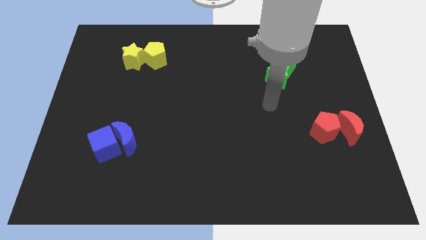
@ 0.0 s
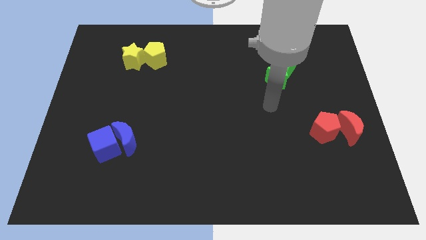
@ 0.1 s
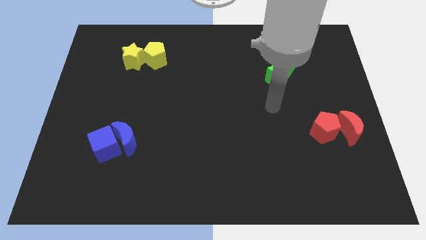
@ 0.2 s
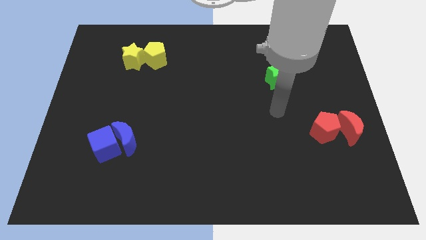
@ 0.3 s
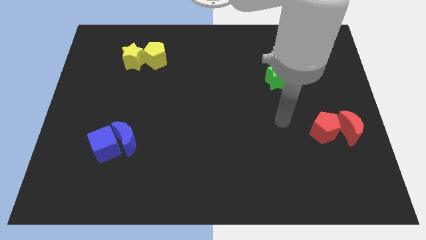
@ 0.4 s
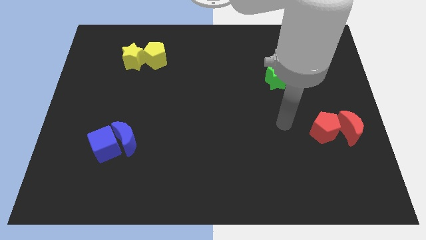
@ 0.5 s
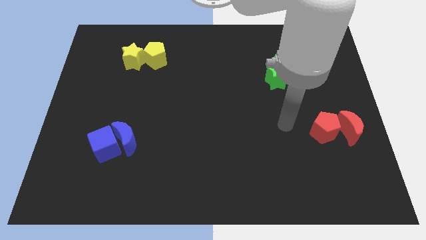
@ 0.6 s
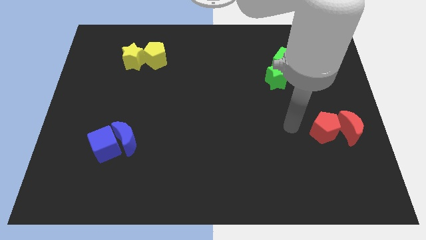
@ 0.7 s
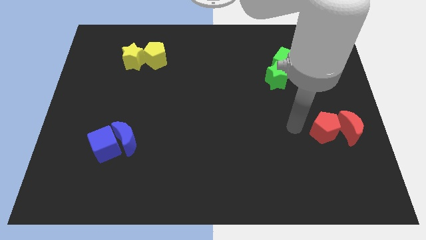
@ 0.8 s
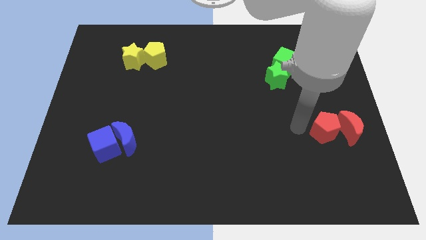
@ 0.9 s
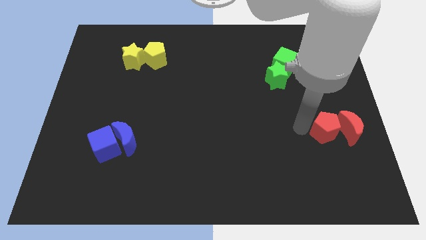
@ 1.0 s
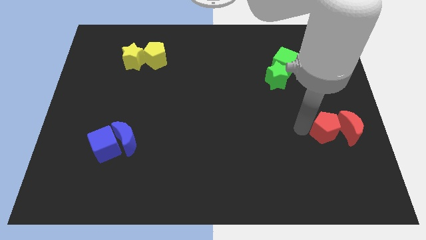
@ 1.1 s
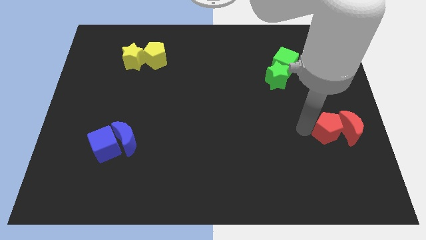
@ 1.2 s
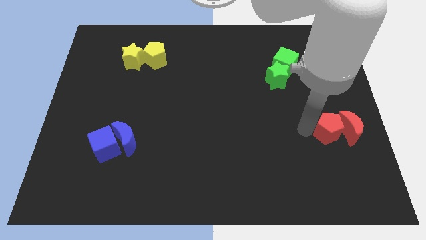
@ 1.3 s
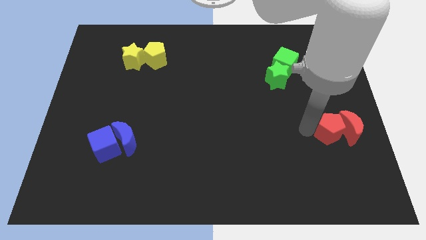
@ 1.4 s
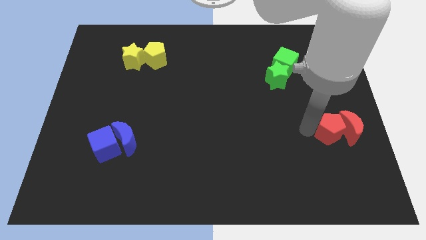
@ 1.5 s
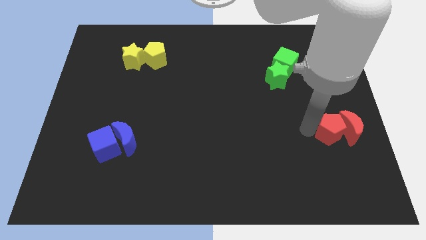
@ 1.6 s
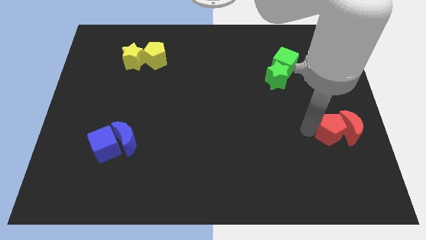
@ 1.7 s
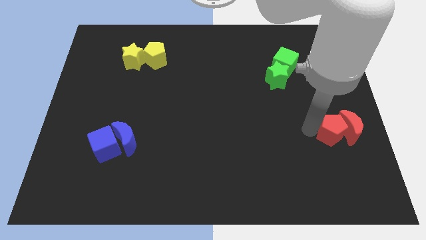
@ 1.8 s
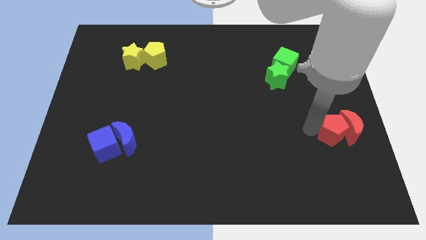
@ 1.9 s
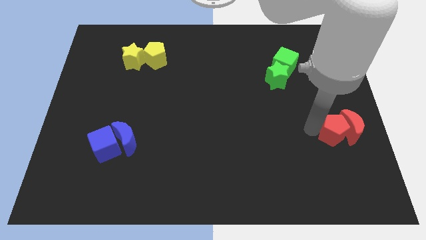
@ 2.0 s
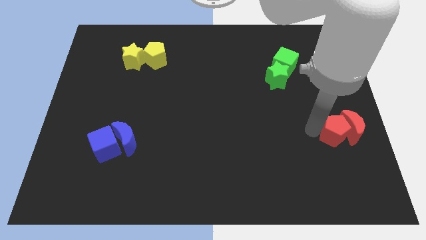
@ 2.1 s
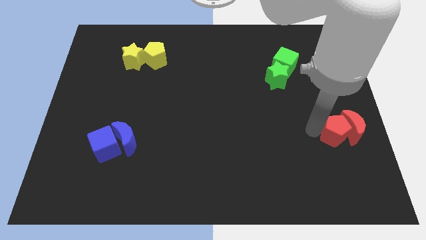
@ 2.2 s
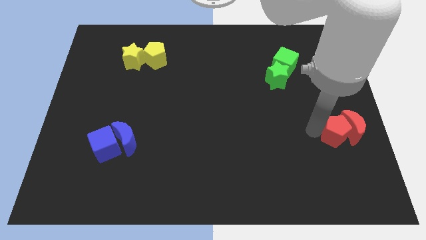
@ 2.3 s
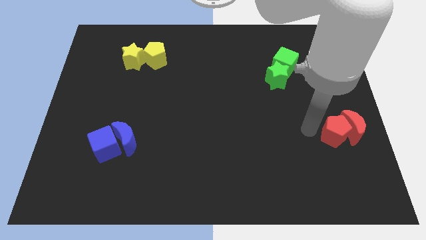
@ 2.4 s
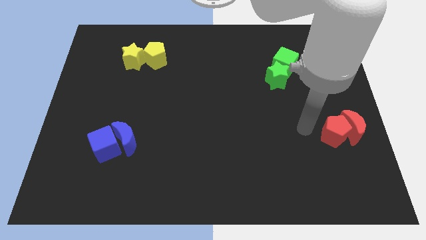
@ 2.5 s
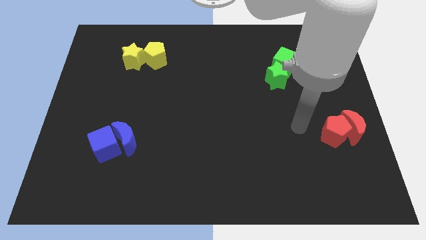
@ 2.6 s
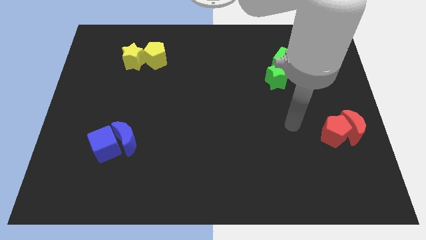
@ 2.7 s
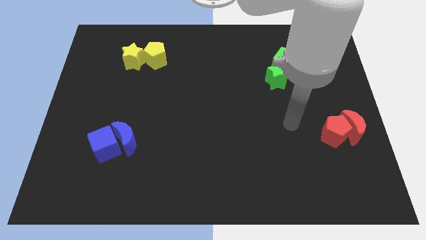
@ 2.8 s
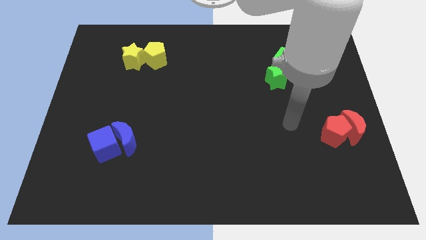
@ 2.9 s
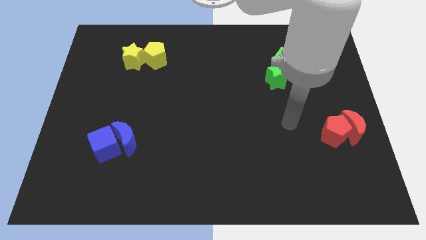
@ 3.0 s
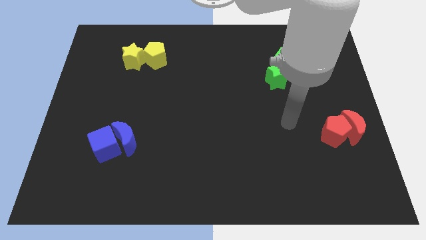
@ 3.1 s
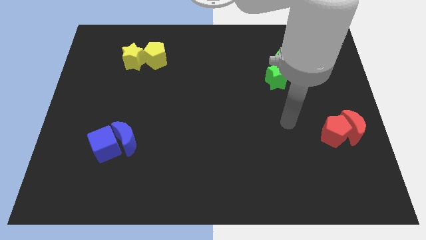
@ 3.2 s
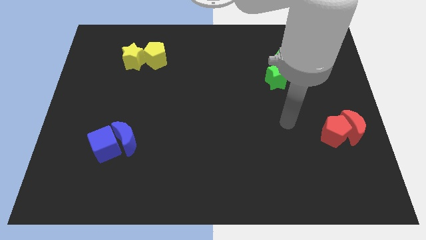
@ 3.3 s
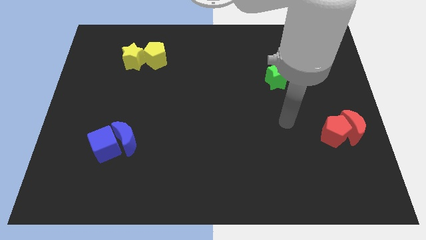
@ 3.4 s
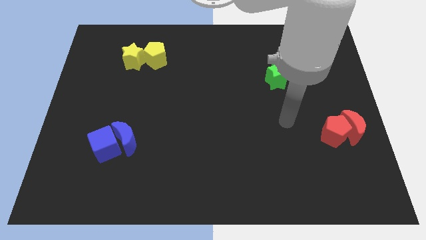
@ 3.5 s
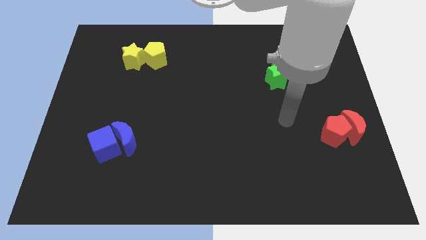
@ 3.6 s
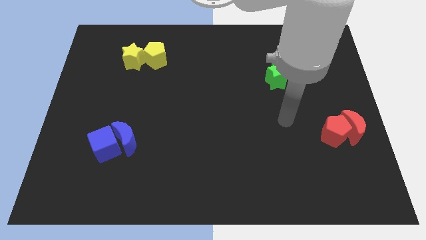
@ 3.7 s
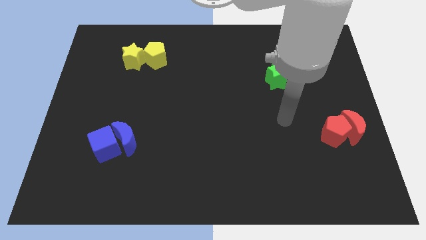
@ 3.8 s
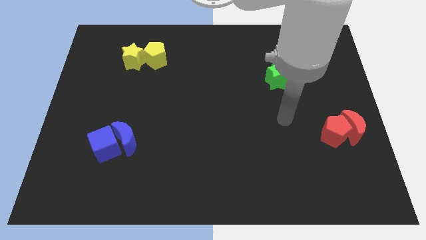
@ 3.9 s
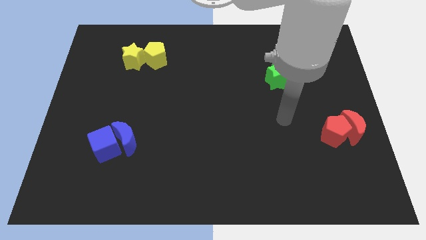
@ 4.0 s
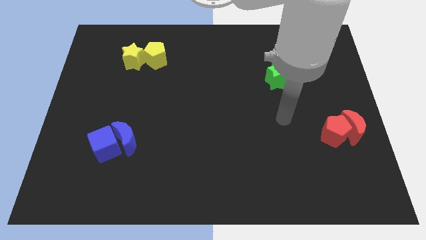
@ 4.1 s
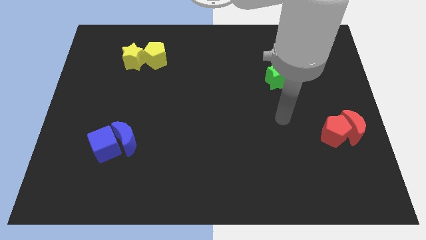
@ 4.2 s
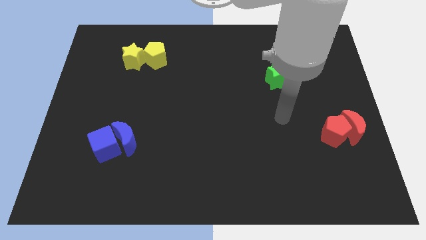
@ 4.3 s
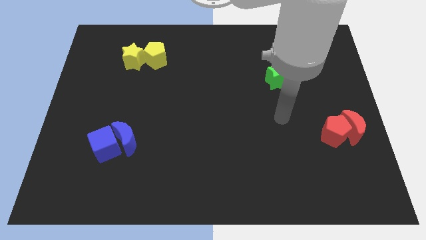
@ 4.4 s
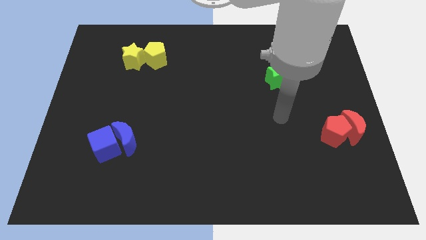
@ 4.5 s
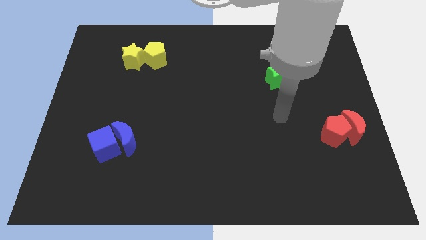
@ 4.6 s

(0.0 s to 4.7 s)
move red pentagon close into the red crescent

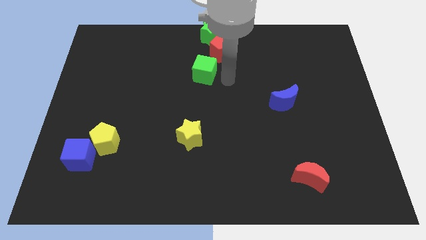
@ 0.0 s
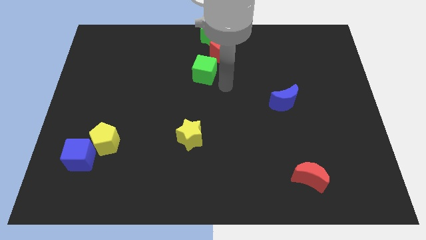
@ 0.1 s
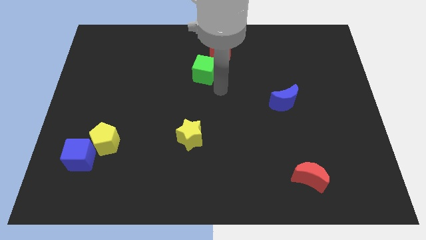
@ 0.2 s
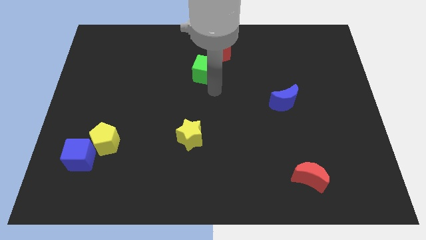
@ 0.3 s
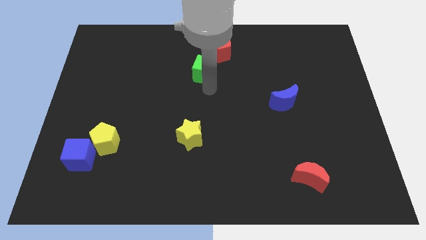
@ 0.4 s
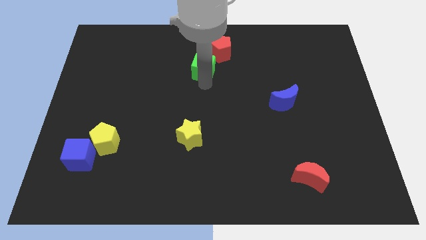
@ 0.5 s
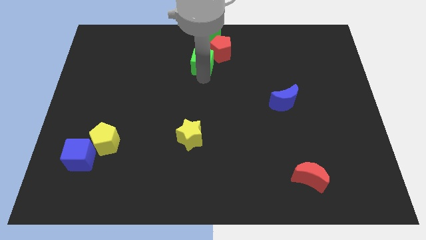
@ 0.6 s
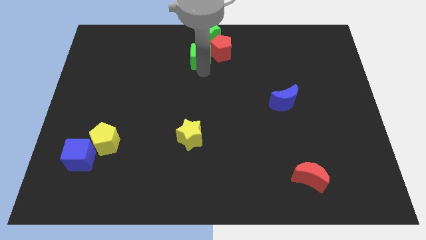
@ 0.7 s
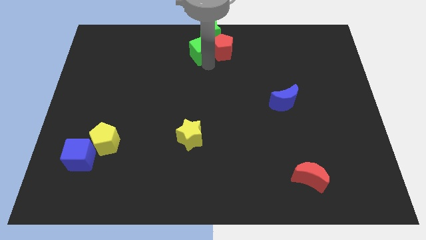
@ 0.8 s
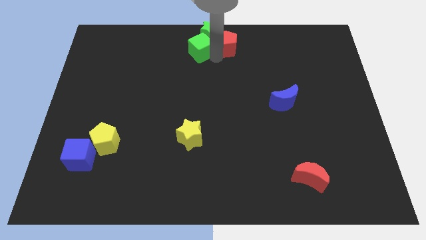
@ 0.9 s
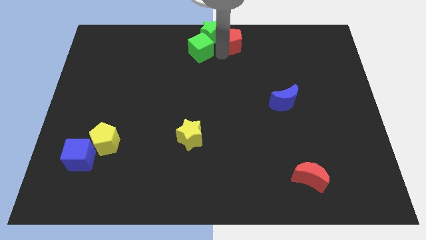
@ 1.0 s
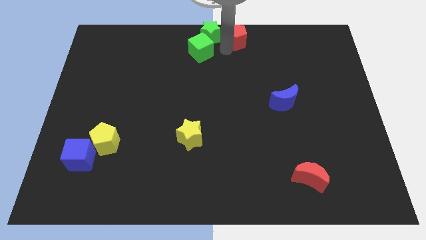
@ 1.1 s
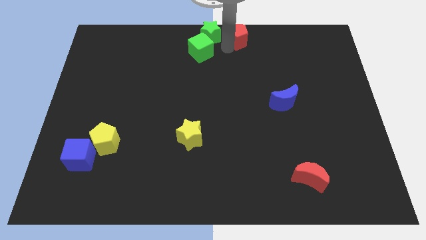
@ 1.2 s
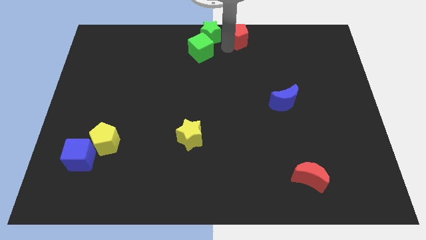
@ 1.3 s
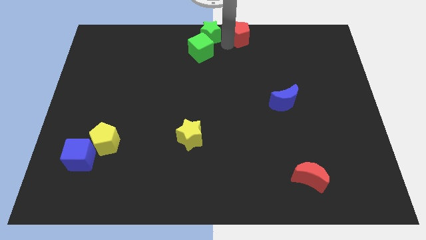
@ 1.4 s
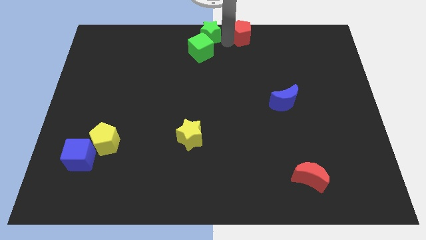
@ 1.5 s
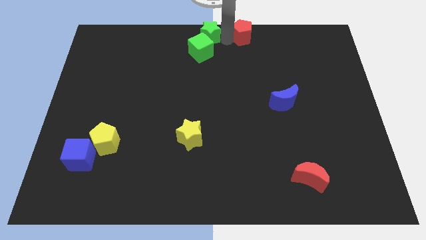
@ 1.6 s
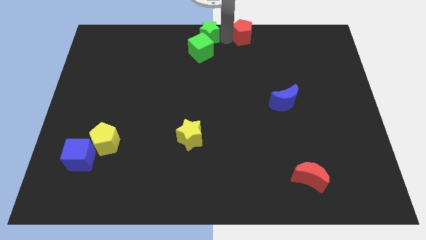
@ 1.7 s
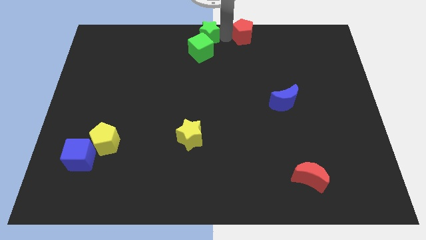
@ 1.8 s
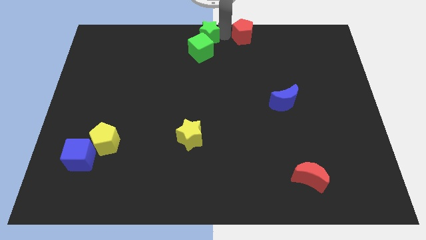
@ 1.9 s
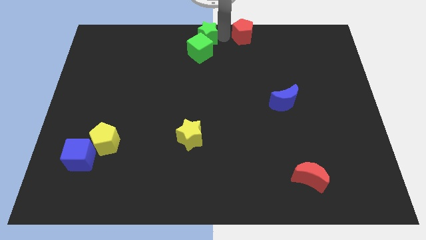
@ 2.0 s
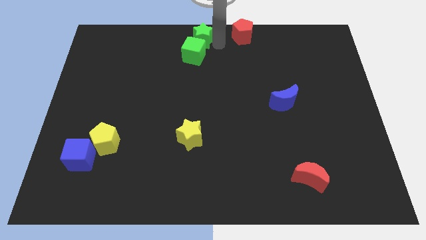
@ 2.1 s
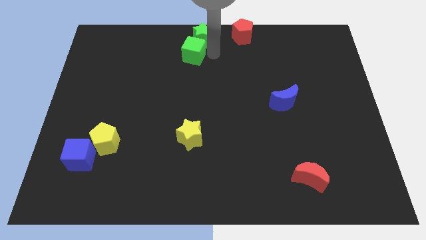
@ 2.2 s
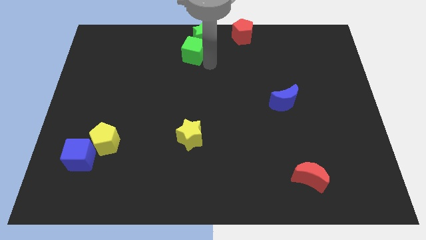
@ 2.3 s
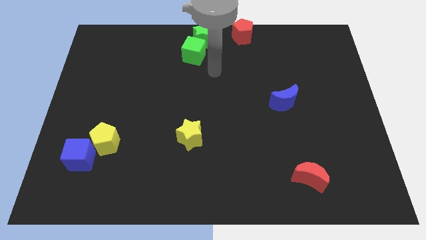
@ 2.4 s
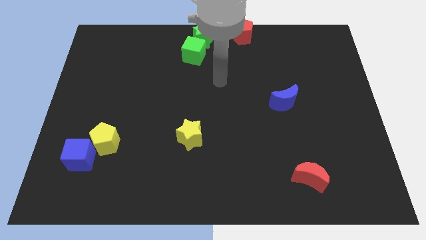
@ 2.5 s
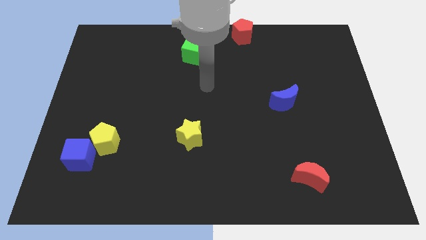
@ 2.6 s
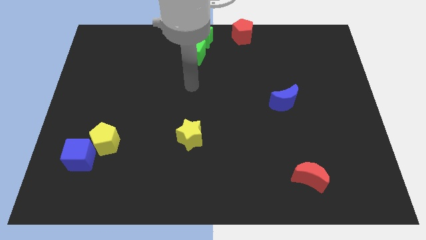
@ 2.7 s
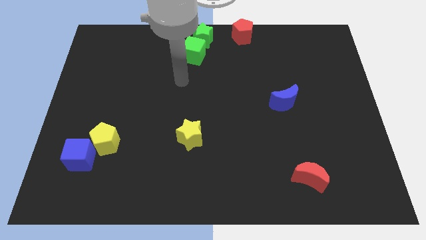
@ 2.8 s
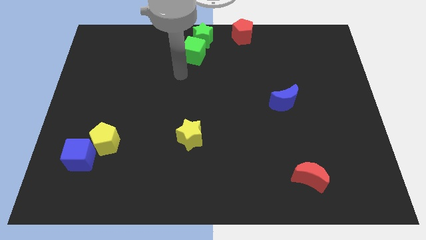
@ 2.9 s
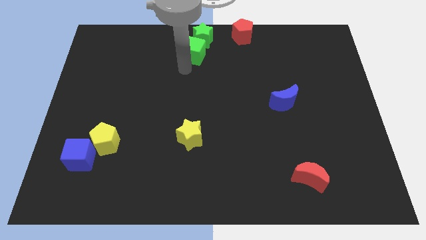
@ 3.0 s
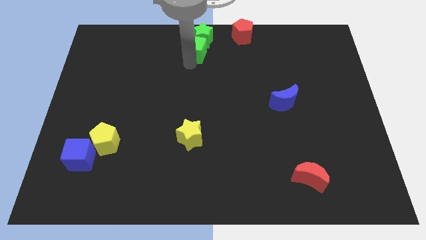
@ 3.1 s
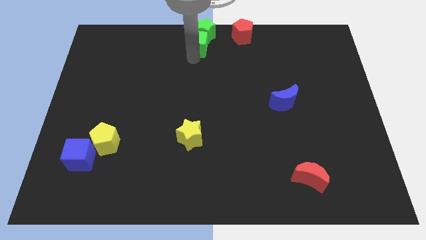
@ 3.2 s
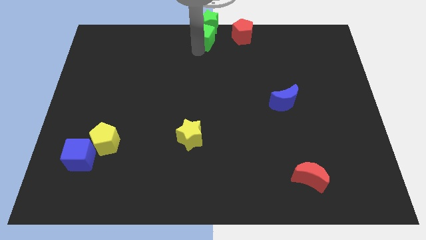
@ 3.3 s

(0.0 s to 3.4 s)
separate the red pentagon and the green blocks

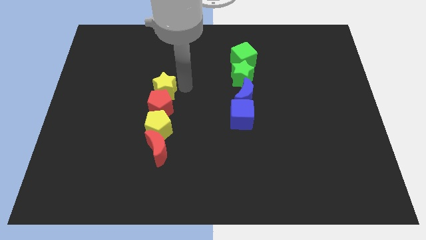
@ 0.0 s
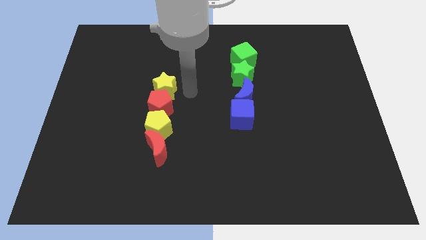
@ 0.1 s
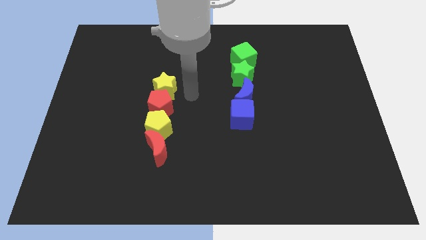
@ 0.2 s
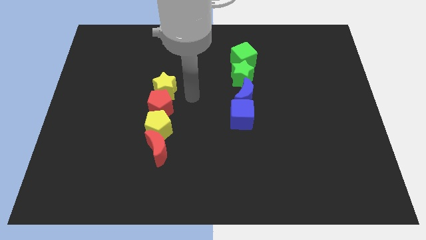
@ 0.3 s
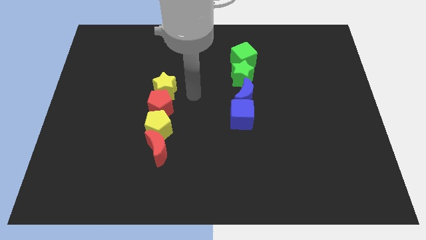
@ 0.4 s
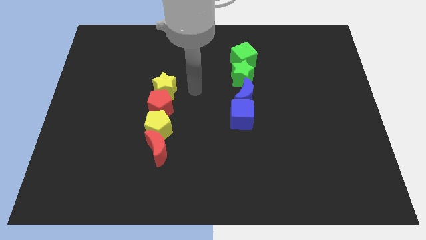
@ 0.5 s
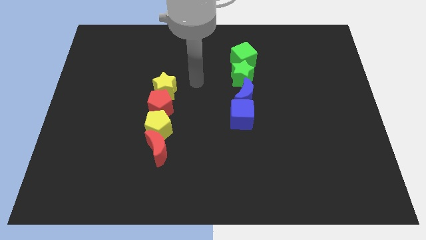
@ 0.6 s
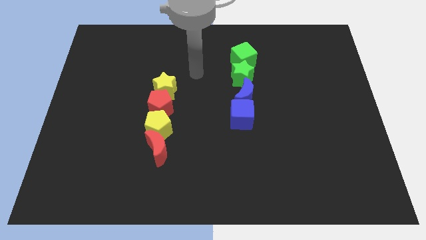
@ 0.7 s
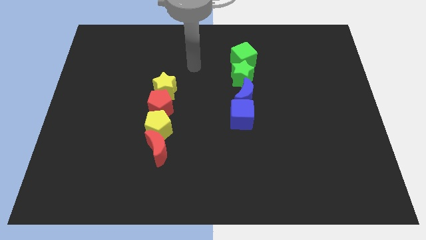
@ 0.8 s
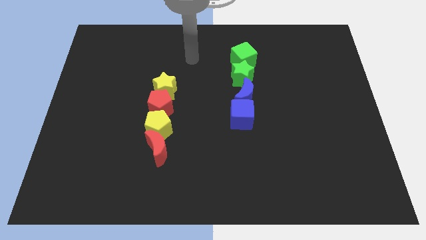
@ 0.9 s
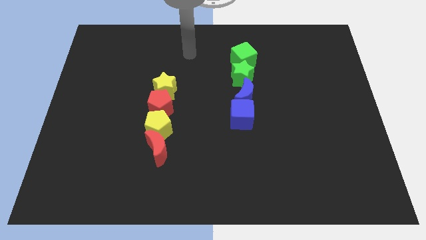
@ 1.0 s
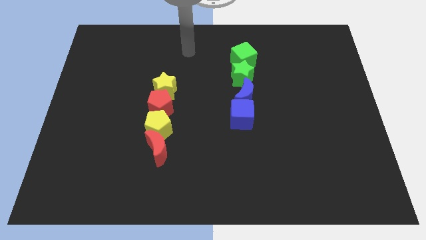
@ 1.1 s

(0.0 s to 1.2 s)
move the arm away from the yellow star
